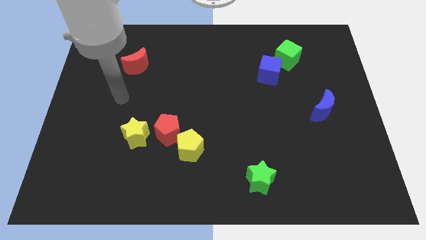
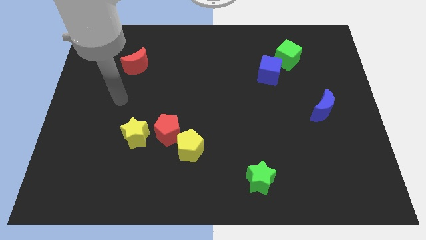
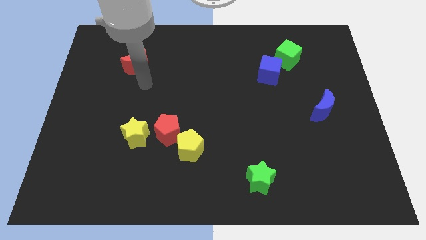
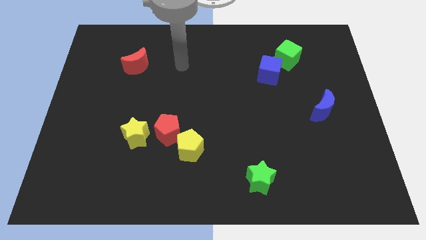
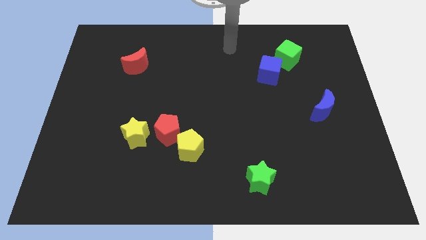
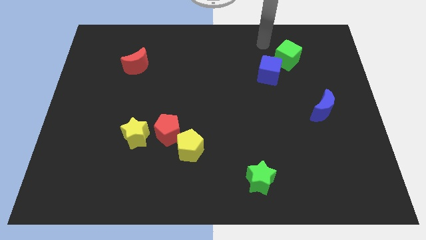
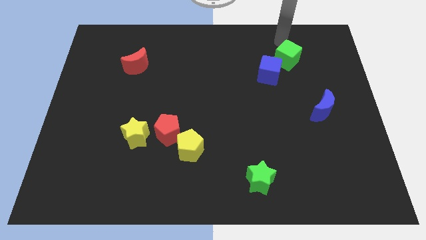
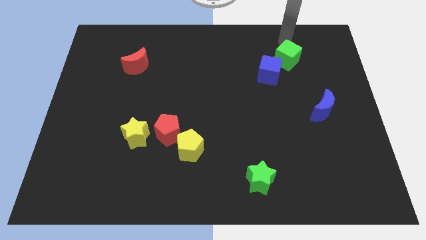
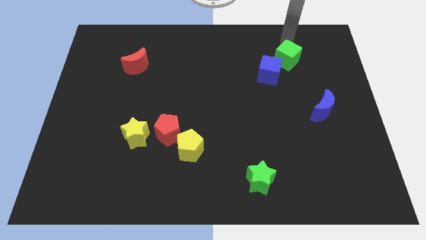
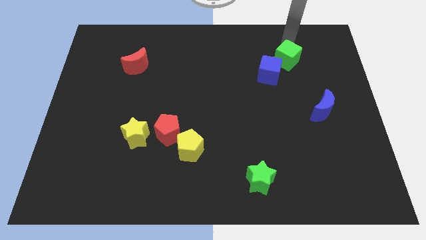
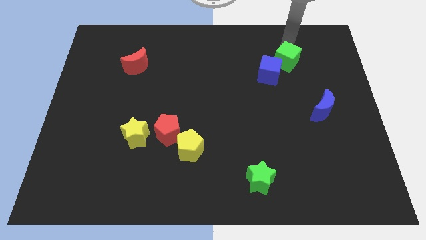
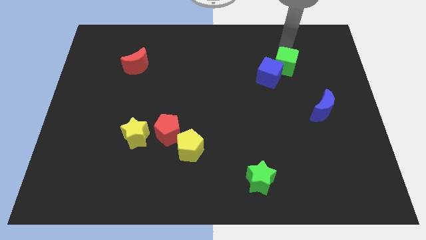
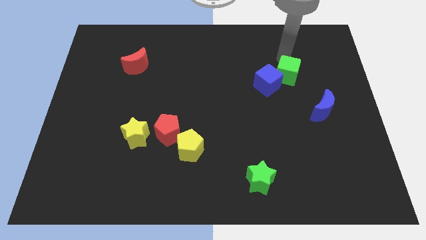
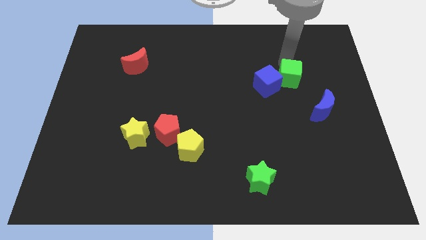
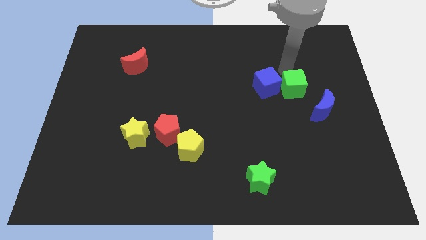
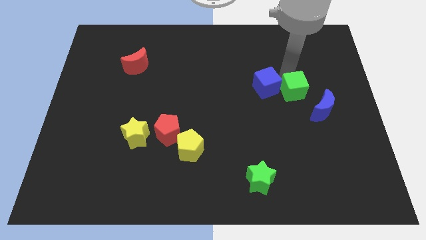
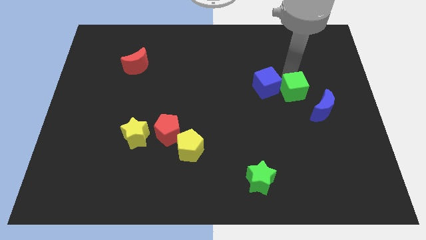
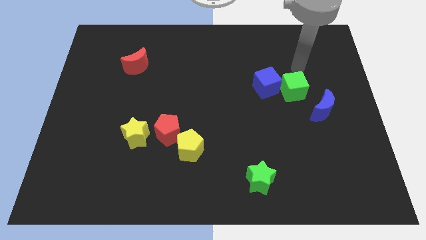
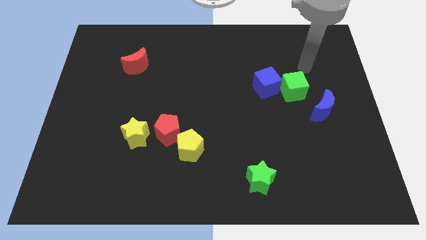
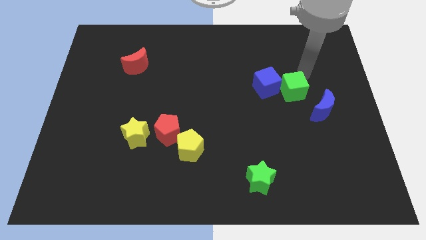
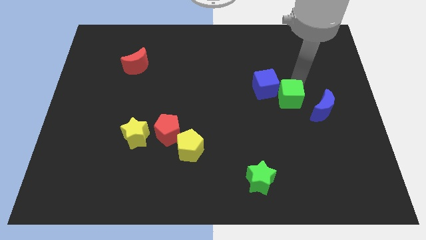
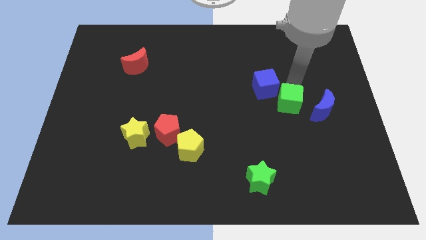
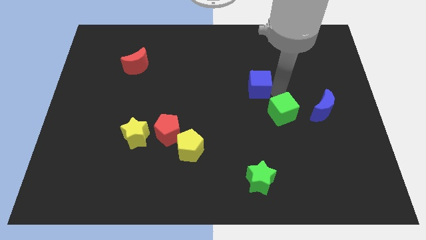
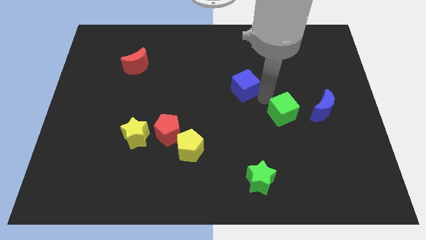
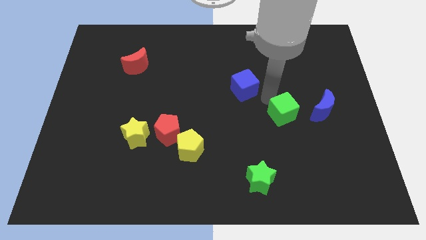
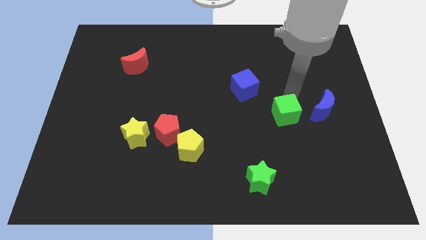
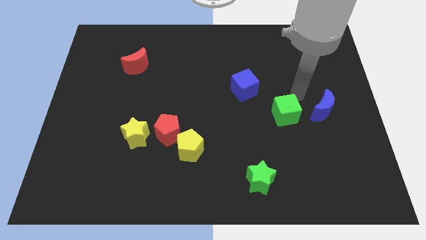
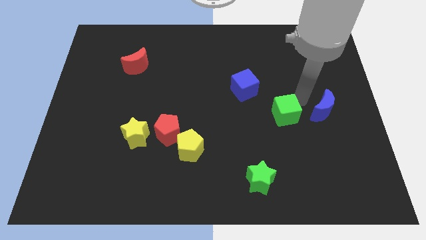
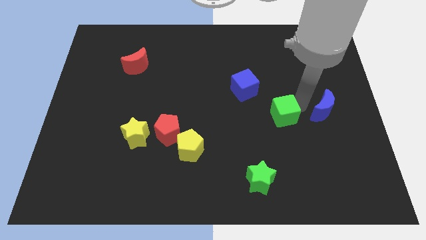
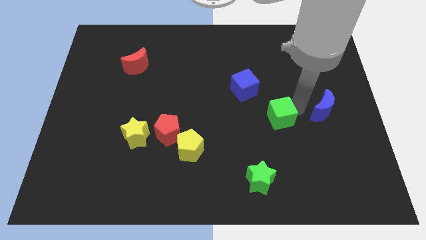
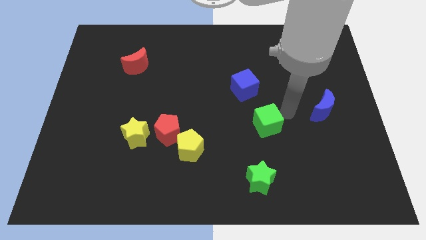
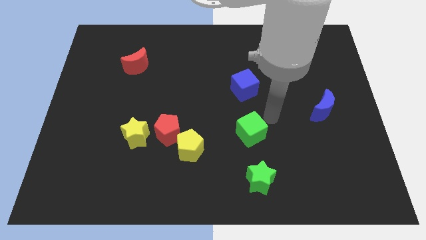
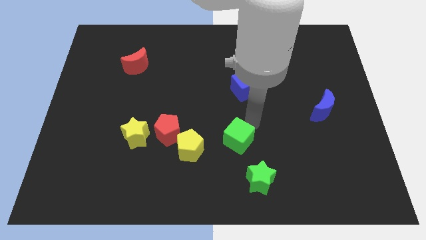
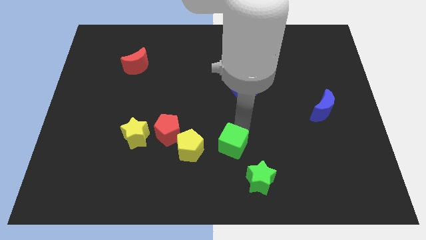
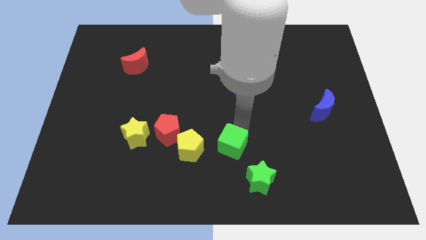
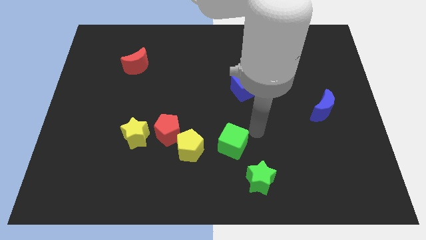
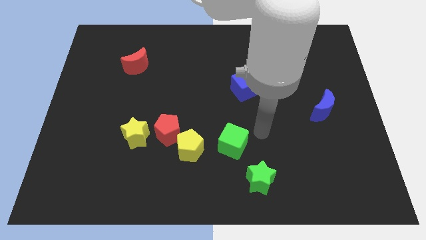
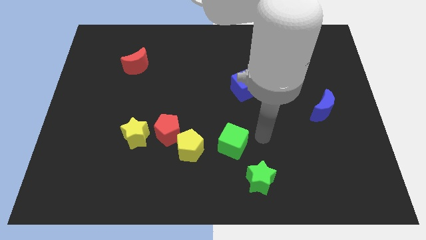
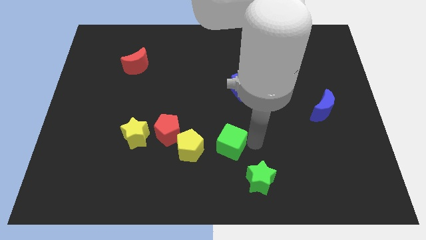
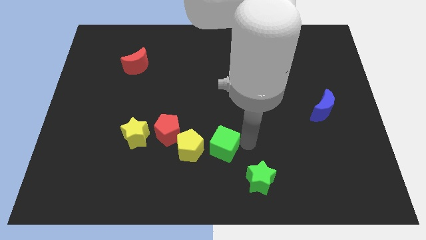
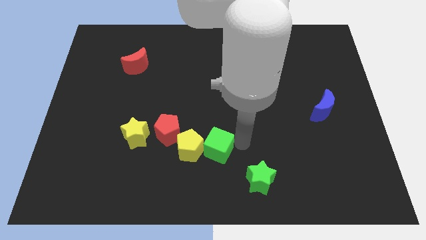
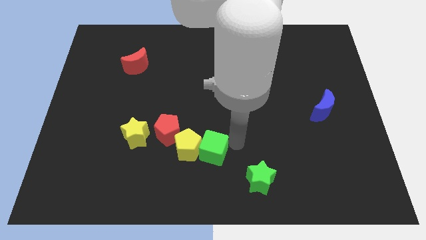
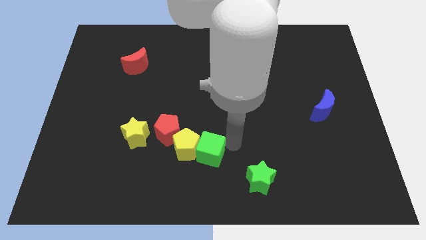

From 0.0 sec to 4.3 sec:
move the green cube next to the yellow pentagon

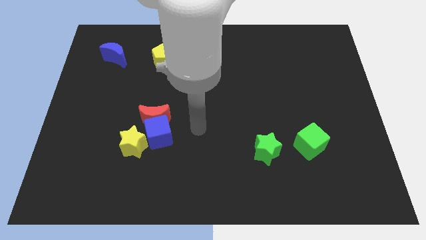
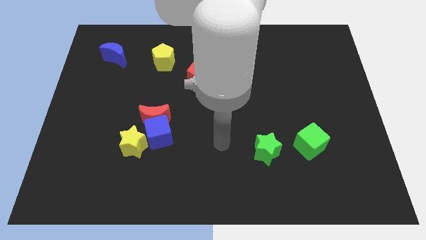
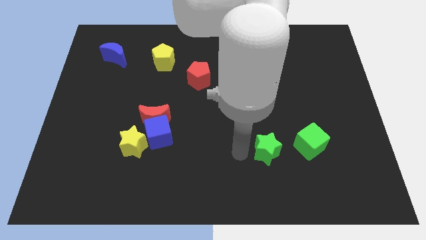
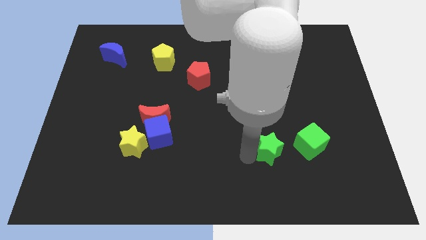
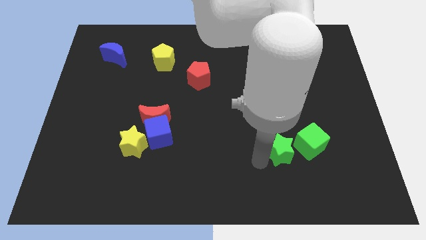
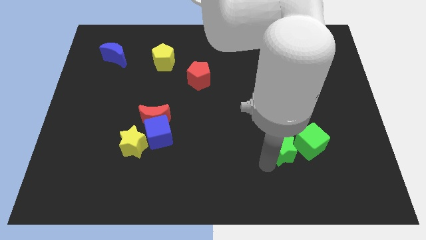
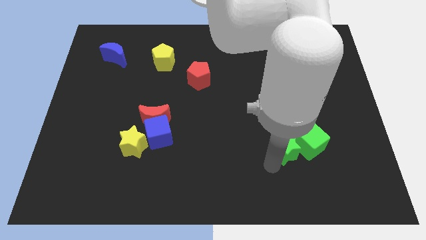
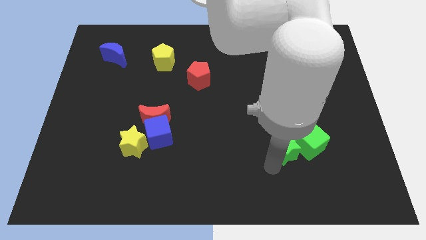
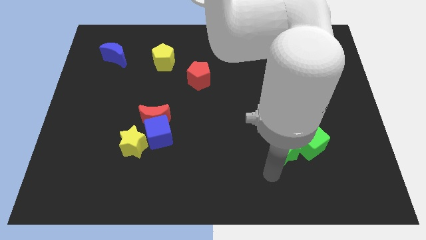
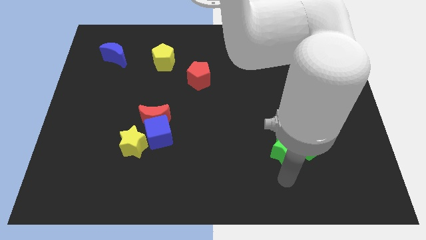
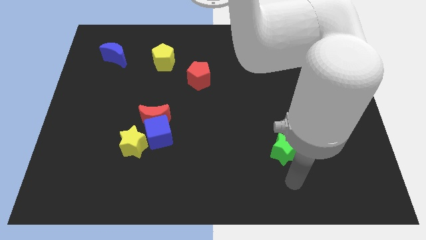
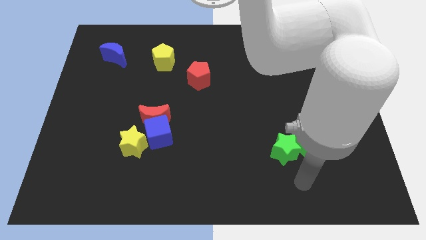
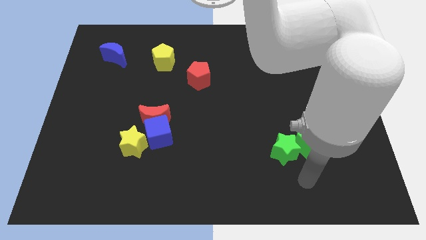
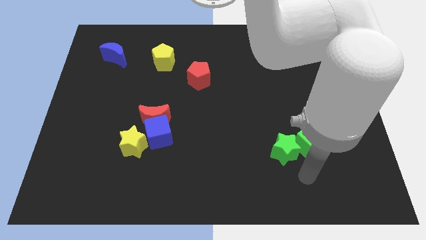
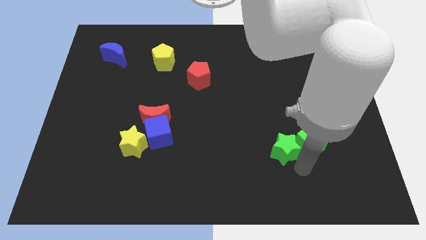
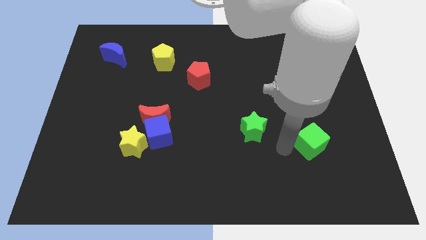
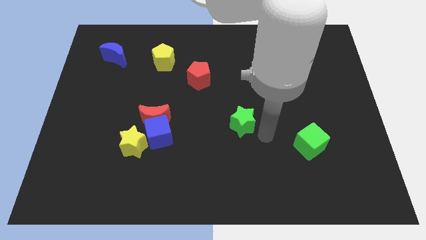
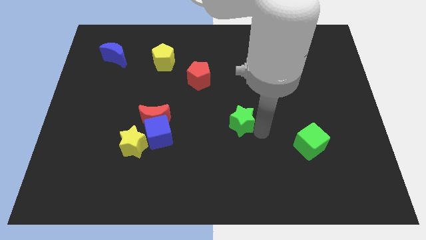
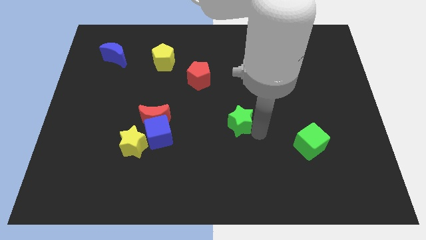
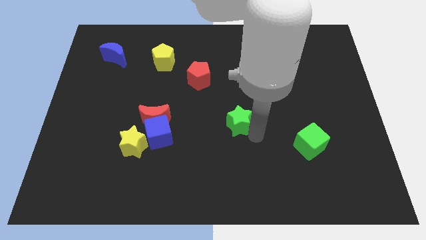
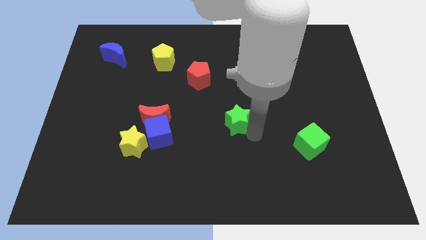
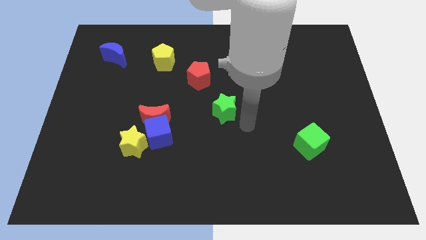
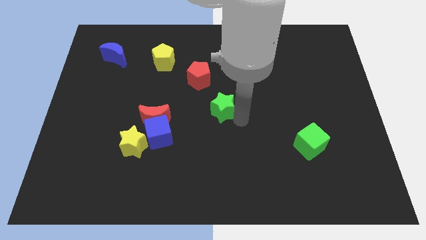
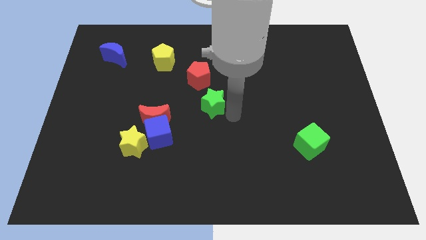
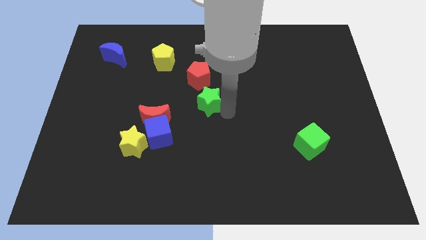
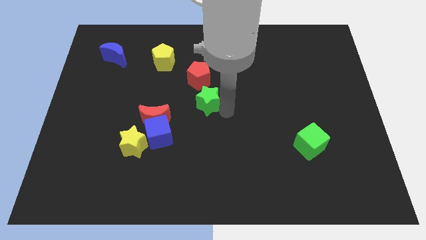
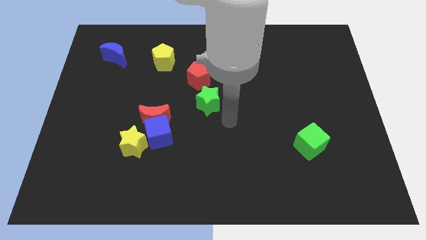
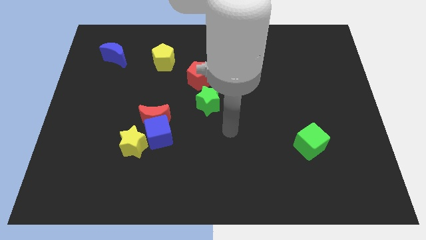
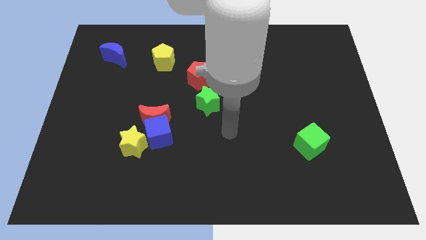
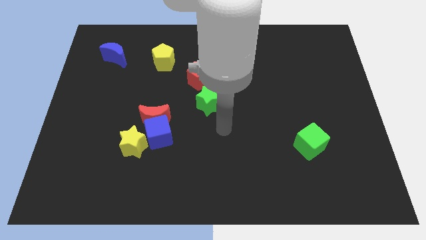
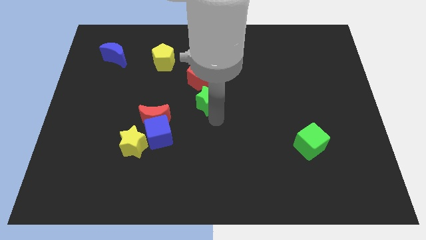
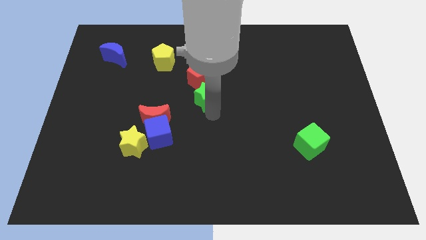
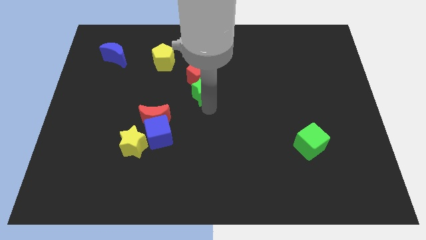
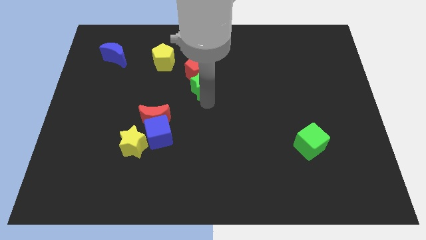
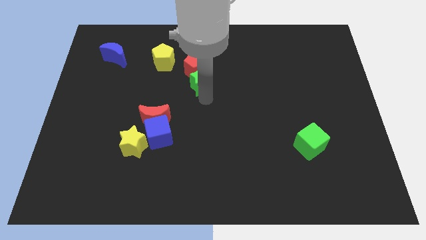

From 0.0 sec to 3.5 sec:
push the green star next to the red pentagon

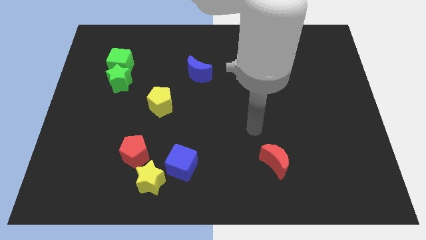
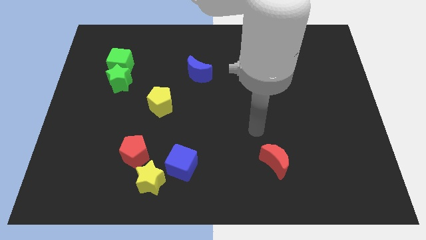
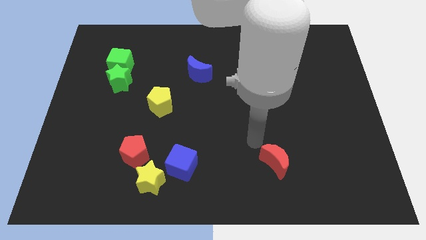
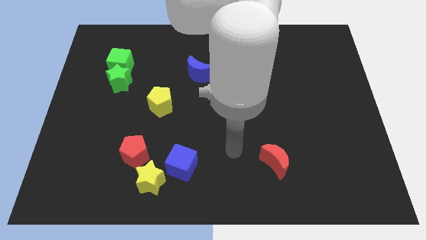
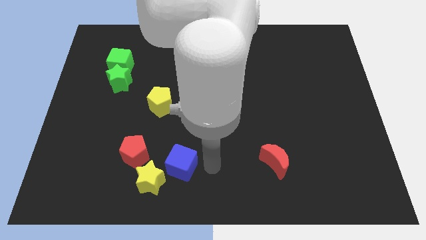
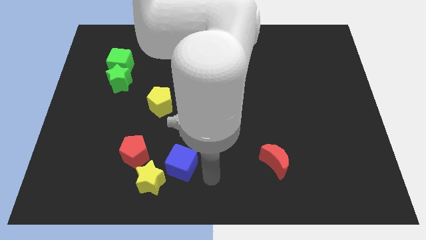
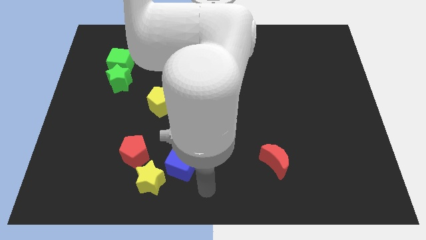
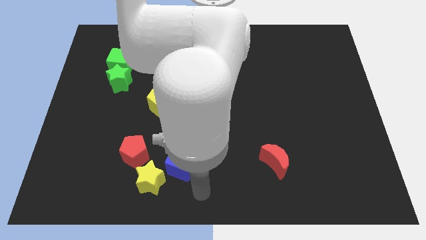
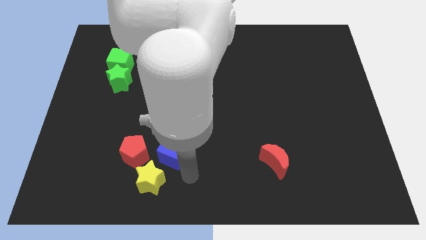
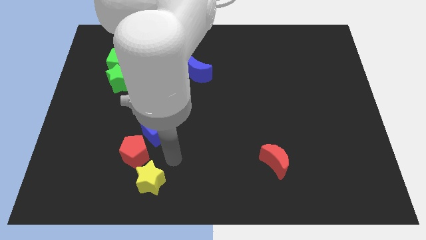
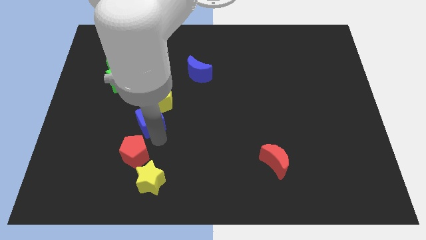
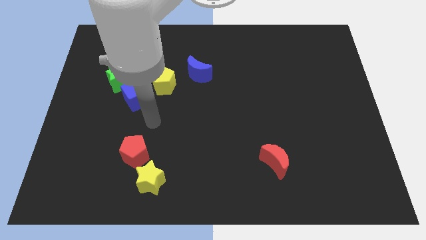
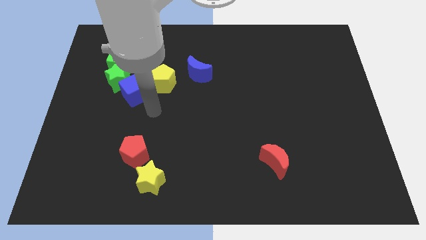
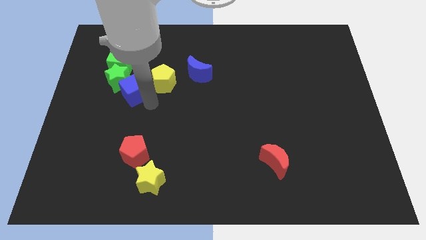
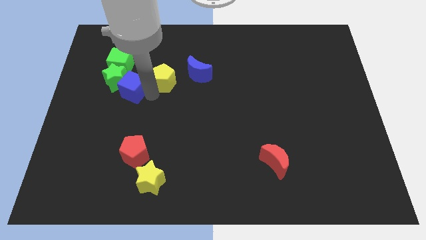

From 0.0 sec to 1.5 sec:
push the blue cube to the green star
